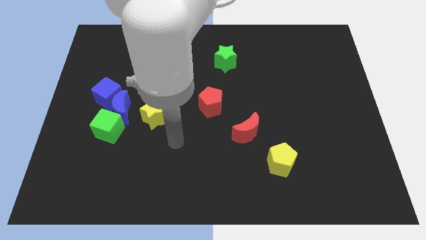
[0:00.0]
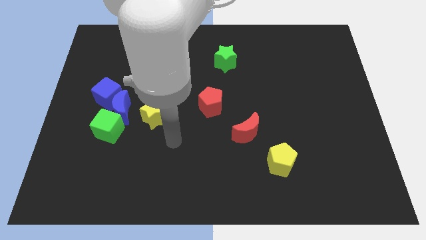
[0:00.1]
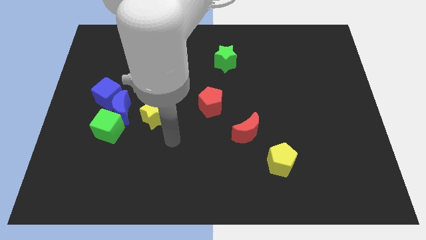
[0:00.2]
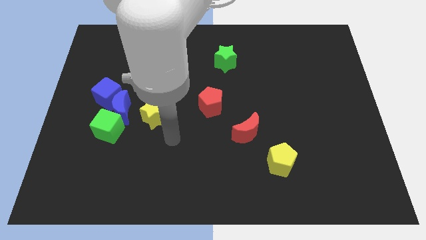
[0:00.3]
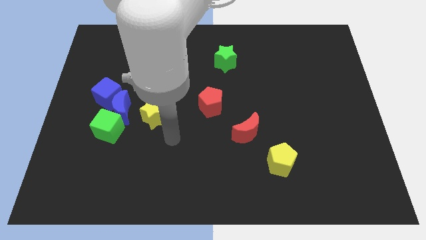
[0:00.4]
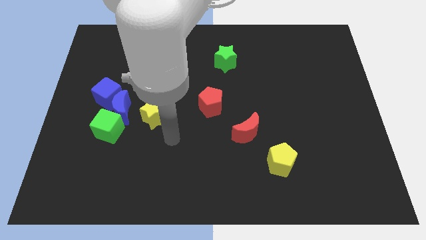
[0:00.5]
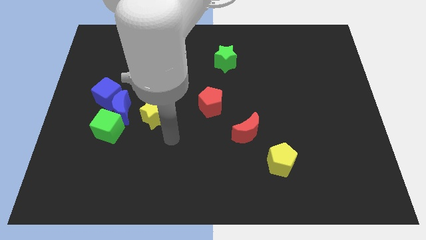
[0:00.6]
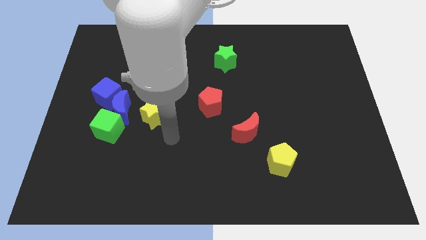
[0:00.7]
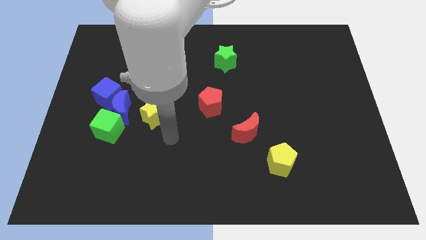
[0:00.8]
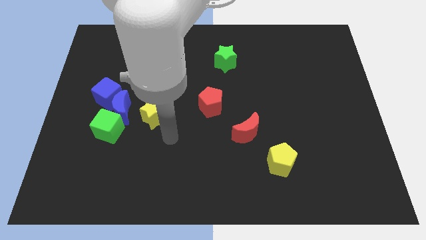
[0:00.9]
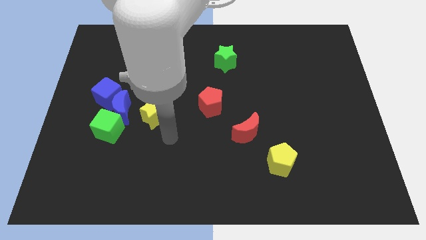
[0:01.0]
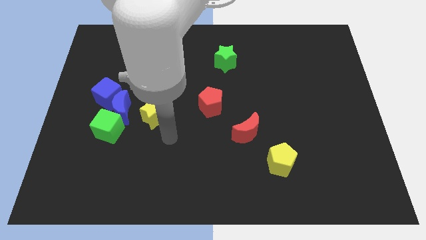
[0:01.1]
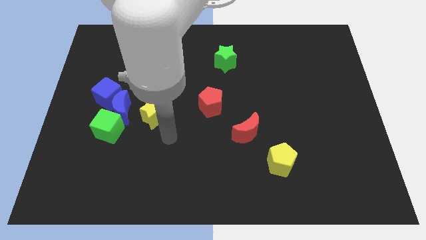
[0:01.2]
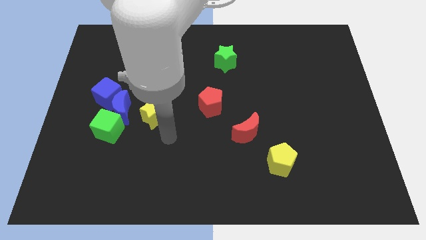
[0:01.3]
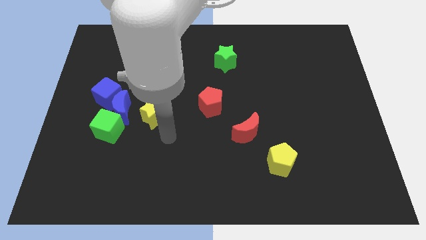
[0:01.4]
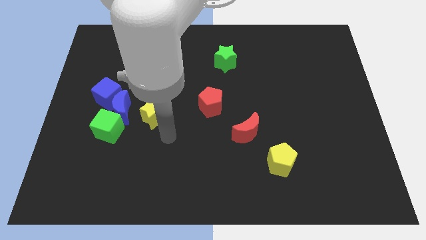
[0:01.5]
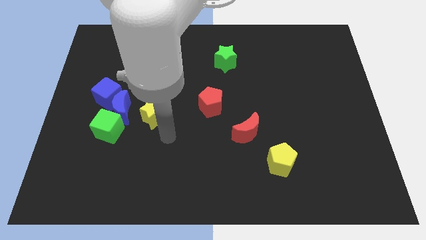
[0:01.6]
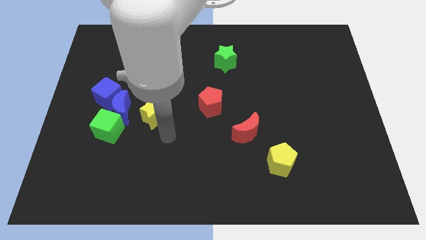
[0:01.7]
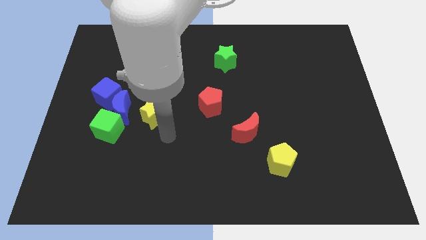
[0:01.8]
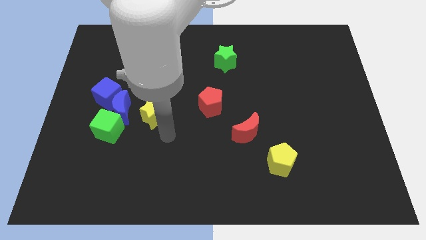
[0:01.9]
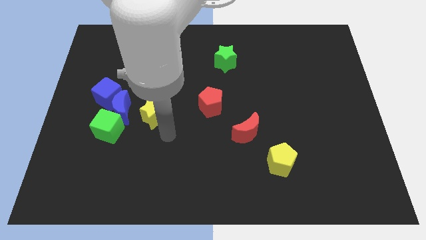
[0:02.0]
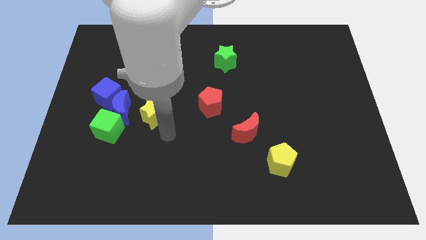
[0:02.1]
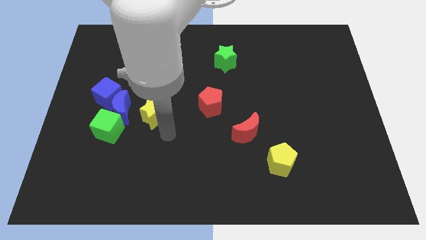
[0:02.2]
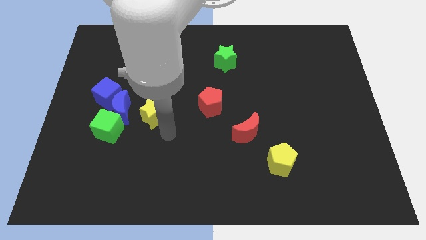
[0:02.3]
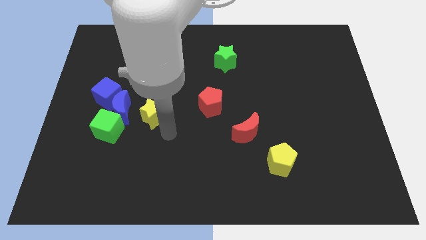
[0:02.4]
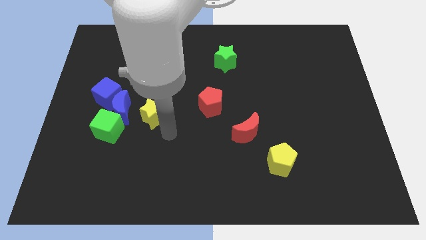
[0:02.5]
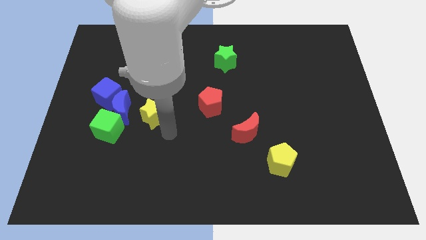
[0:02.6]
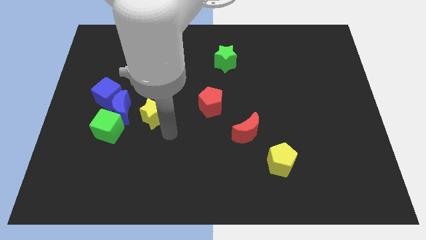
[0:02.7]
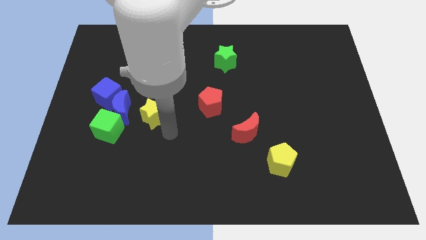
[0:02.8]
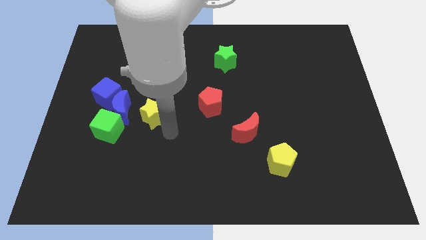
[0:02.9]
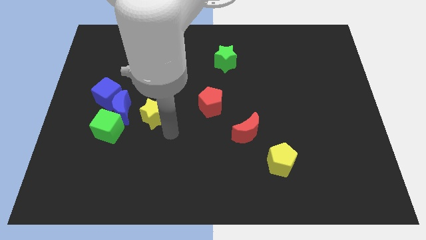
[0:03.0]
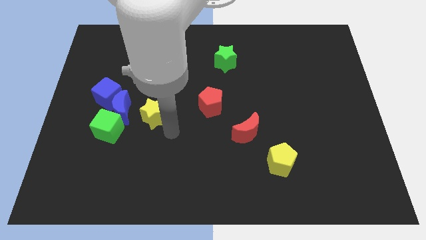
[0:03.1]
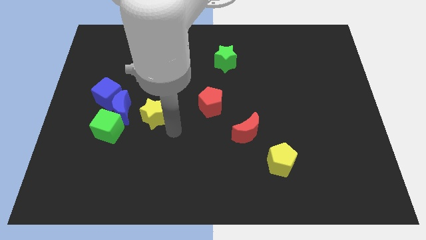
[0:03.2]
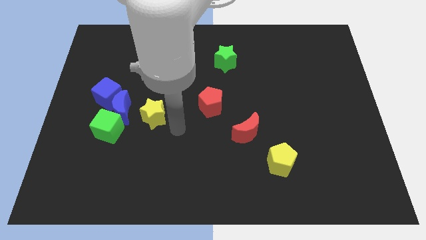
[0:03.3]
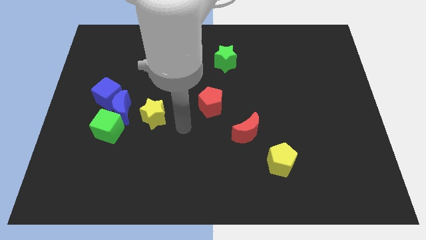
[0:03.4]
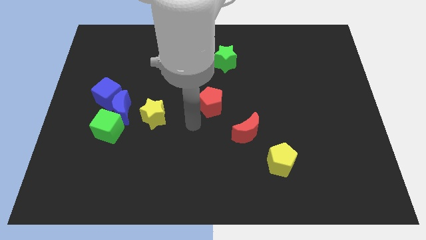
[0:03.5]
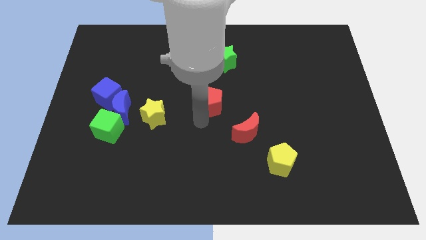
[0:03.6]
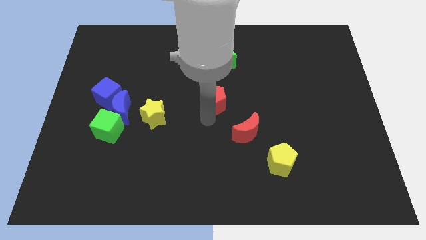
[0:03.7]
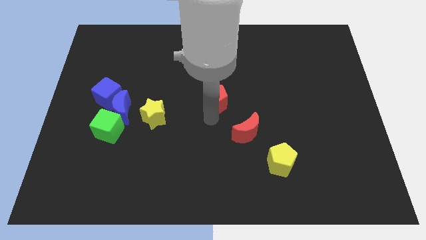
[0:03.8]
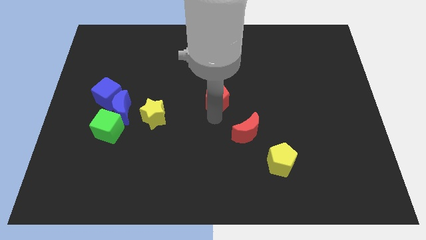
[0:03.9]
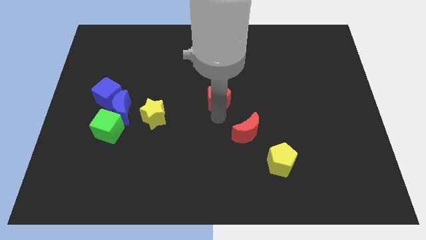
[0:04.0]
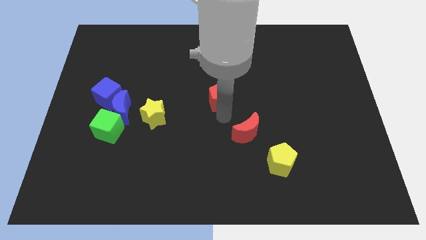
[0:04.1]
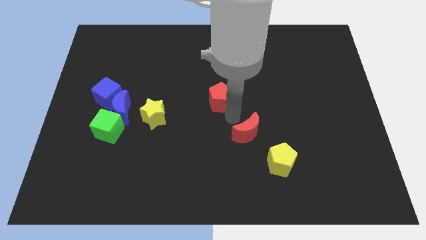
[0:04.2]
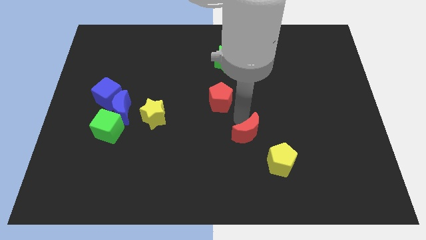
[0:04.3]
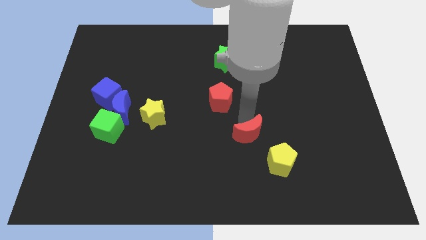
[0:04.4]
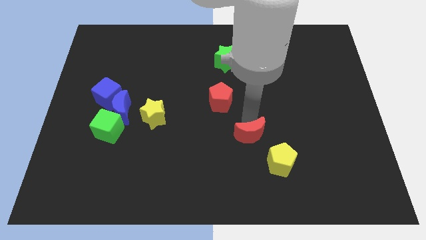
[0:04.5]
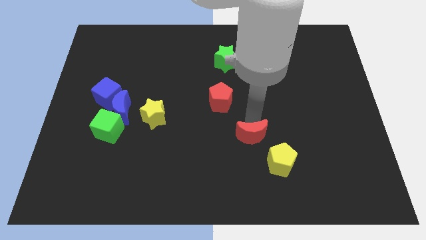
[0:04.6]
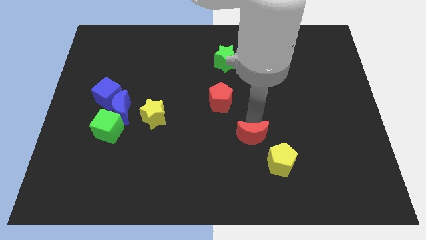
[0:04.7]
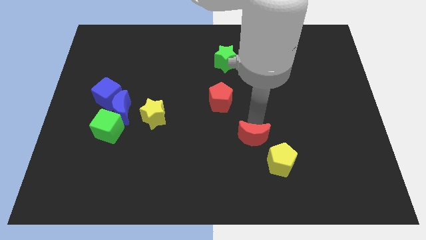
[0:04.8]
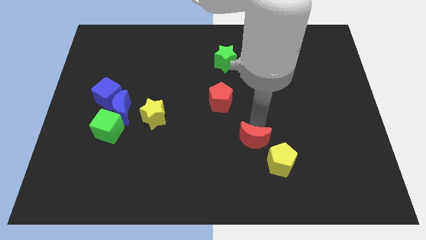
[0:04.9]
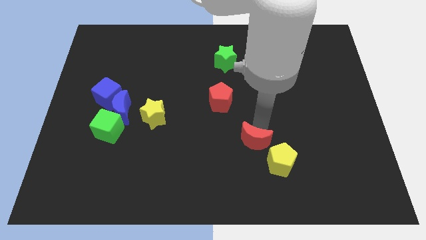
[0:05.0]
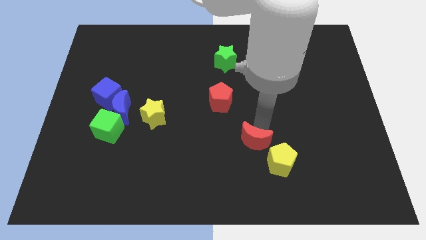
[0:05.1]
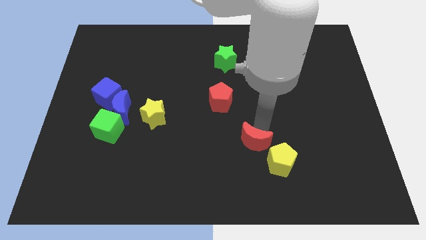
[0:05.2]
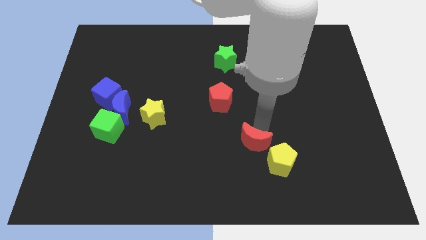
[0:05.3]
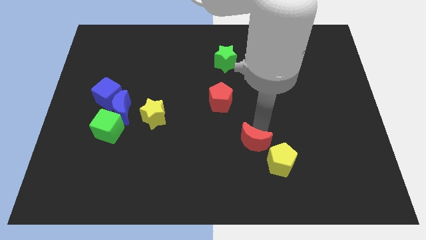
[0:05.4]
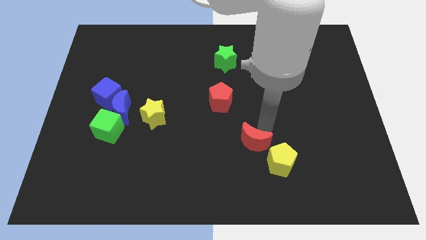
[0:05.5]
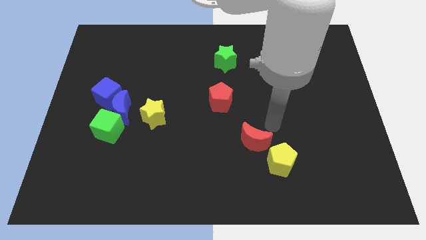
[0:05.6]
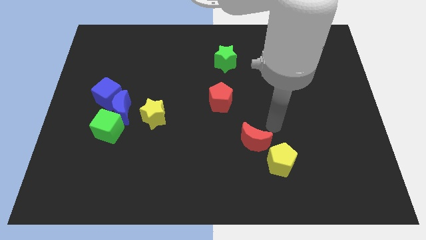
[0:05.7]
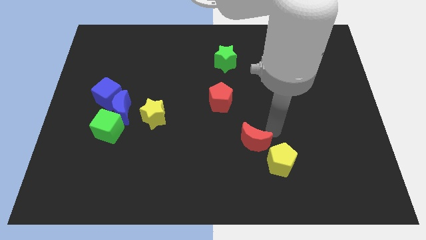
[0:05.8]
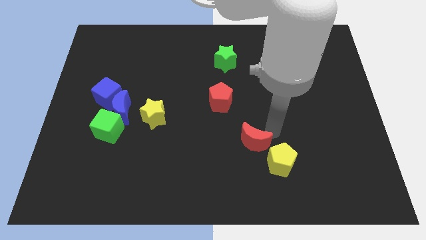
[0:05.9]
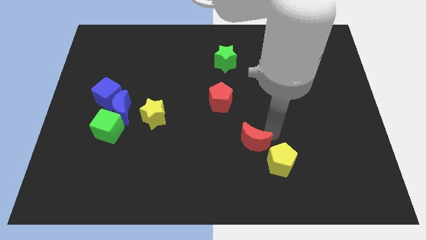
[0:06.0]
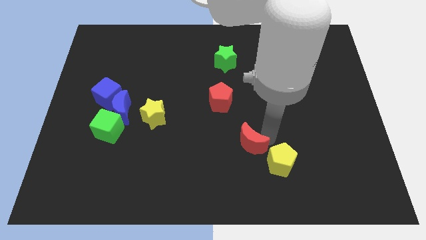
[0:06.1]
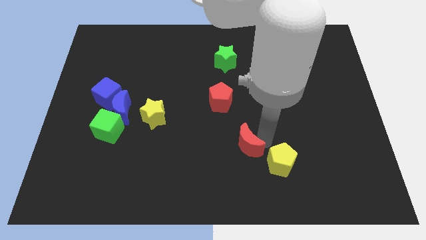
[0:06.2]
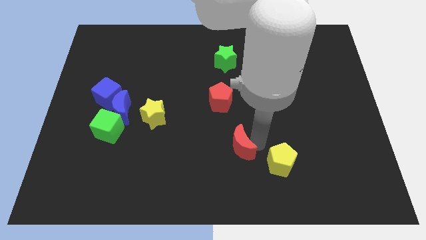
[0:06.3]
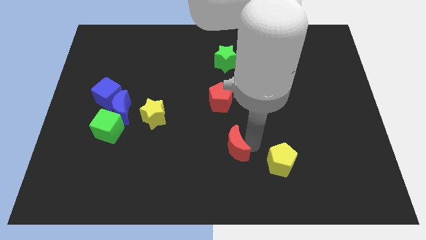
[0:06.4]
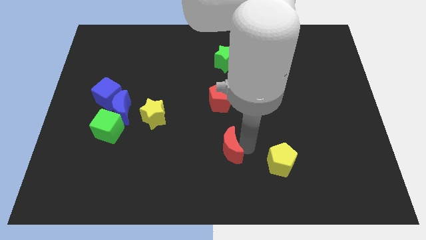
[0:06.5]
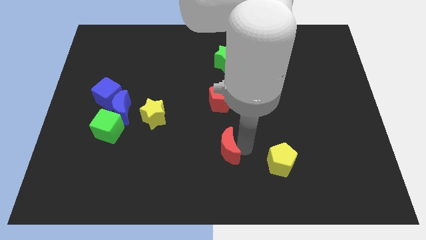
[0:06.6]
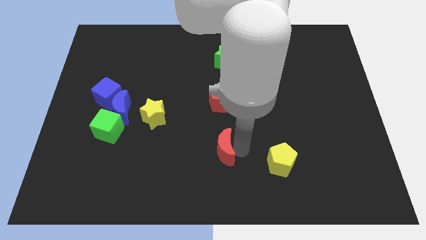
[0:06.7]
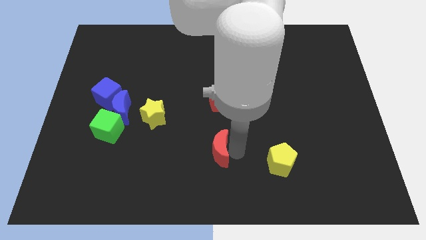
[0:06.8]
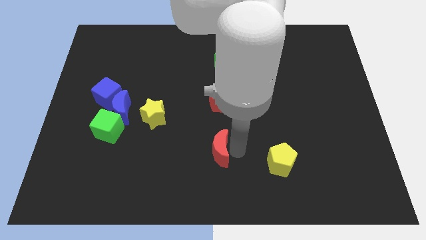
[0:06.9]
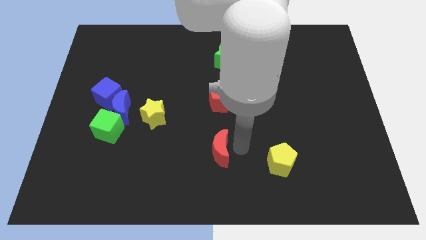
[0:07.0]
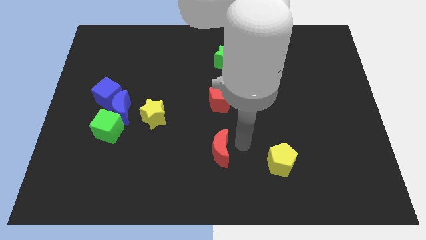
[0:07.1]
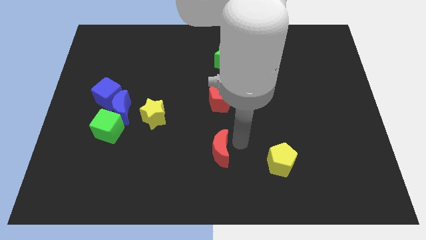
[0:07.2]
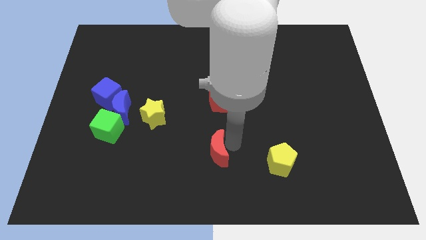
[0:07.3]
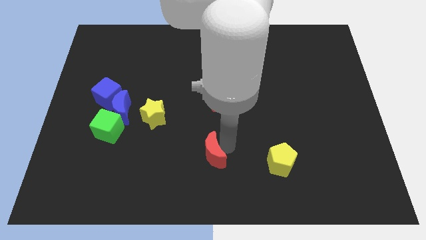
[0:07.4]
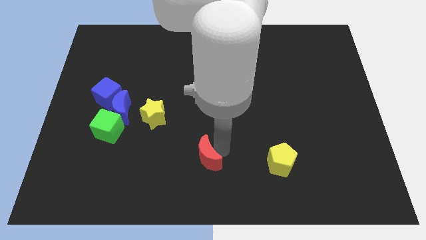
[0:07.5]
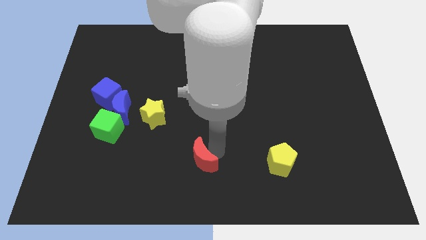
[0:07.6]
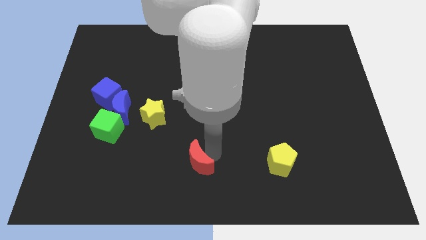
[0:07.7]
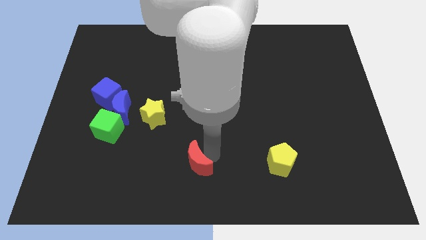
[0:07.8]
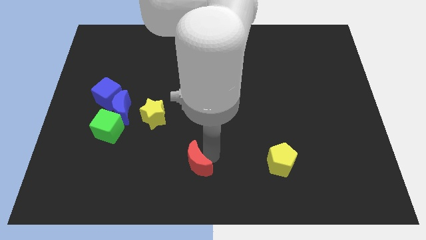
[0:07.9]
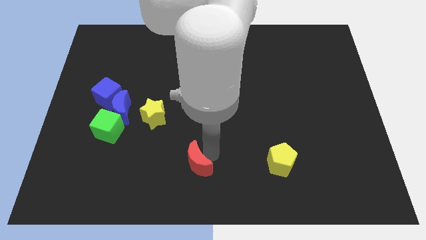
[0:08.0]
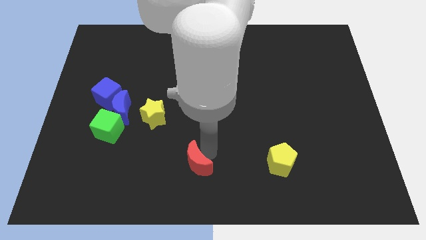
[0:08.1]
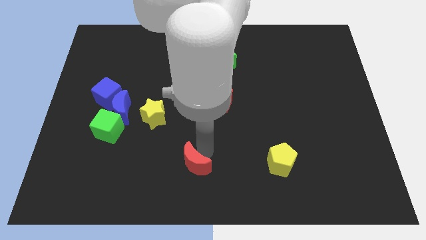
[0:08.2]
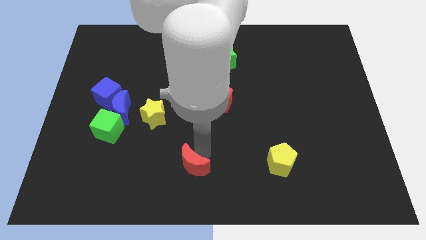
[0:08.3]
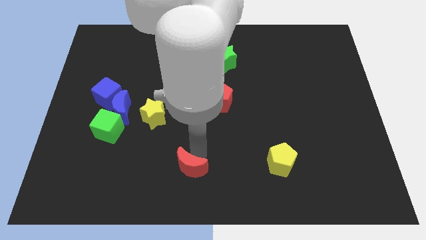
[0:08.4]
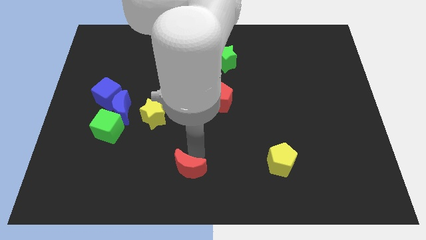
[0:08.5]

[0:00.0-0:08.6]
move the red crescent slightly to the bottom

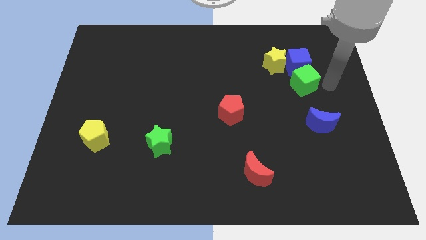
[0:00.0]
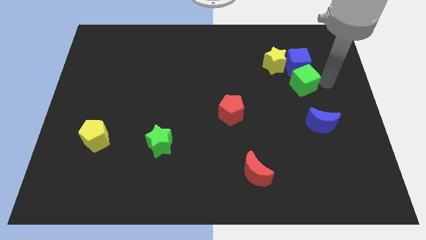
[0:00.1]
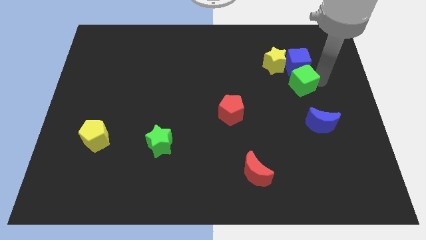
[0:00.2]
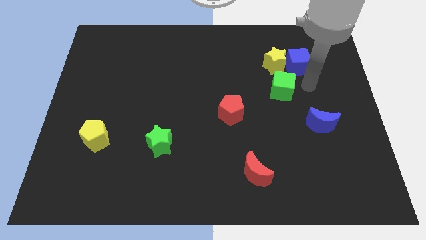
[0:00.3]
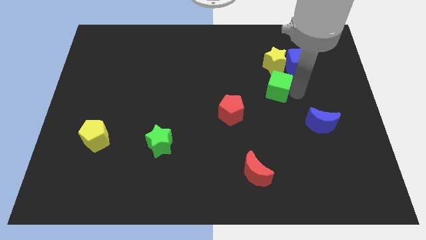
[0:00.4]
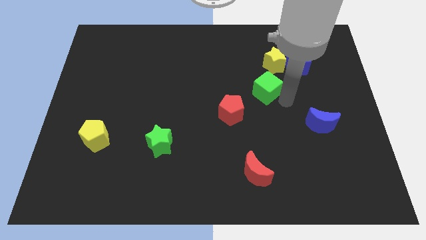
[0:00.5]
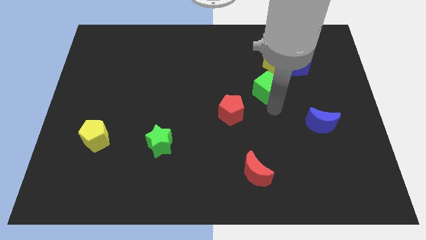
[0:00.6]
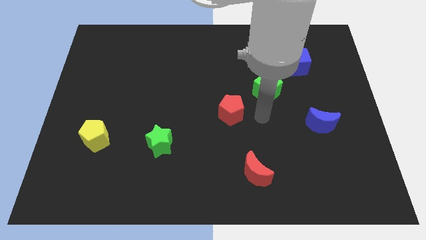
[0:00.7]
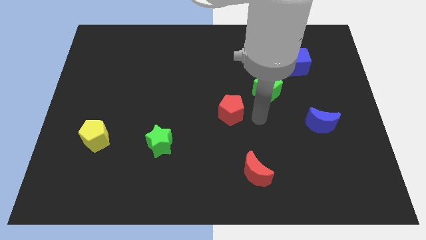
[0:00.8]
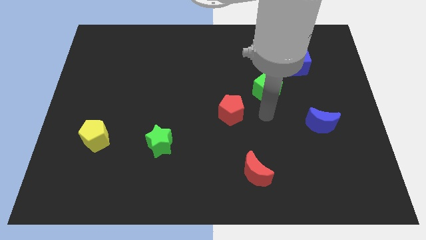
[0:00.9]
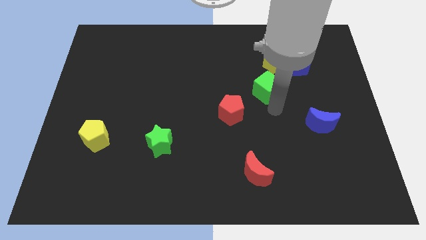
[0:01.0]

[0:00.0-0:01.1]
push the green cube slightly downward
